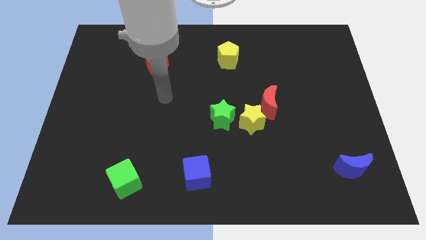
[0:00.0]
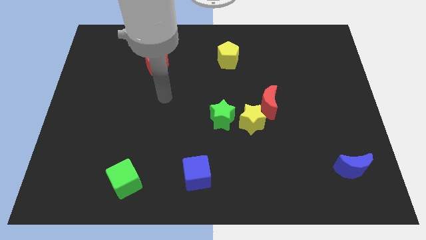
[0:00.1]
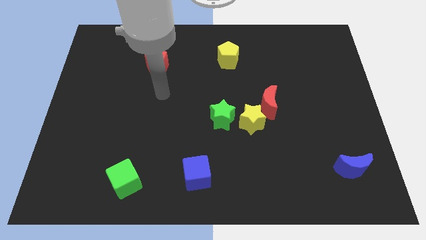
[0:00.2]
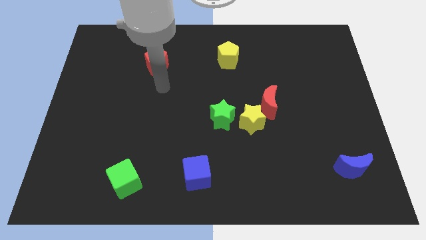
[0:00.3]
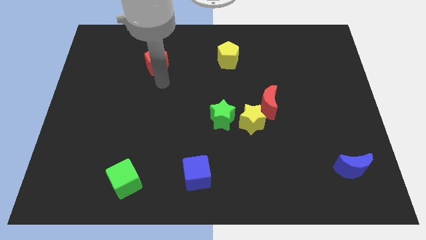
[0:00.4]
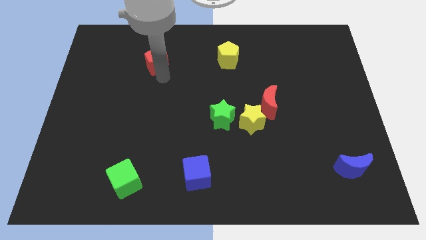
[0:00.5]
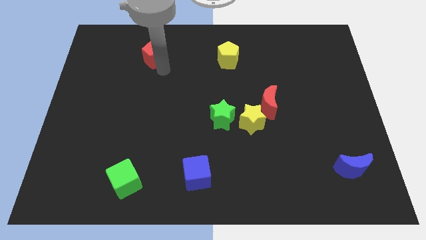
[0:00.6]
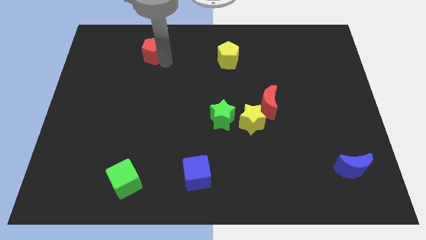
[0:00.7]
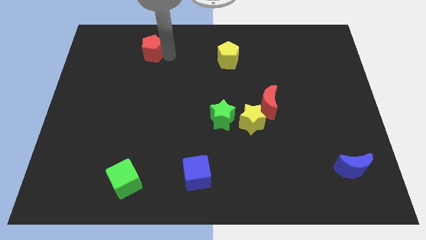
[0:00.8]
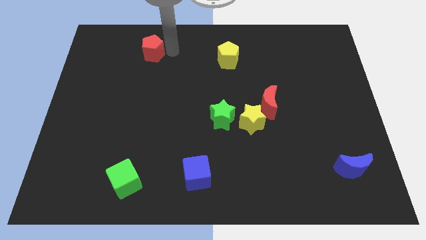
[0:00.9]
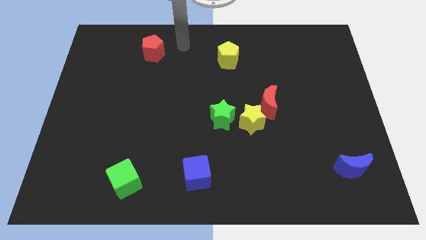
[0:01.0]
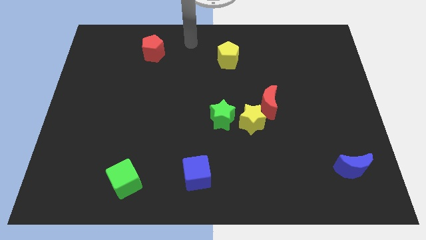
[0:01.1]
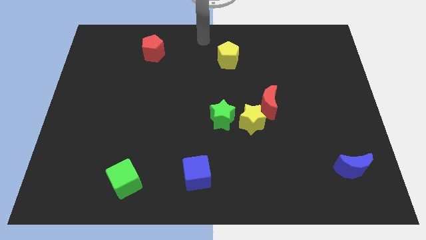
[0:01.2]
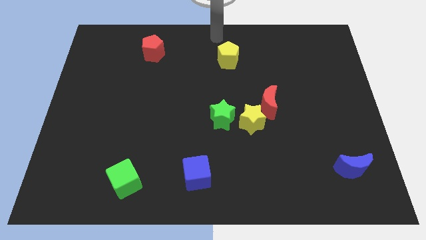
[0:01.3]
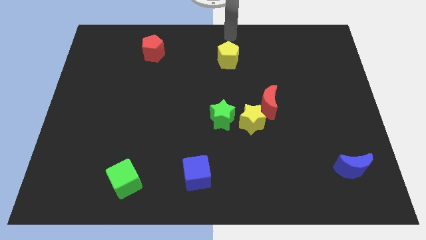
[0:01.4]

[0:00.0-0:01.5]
place your arm above yellow pentagon

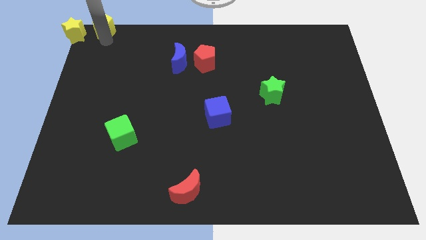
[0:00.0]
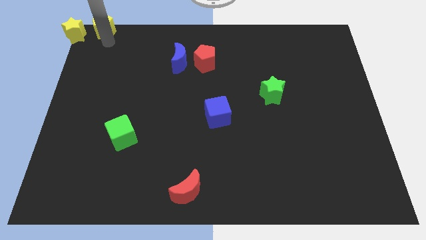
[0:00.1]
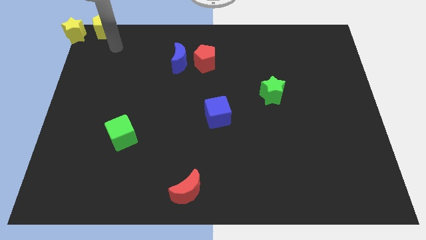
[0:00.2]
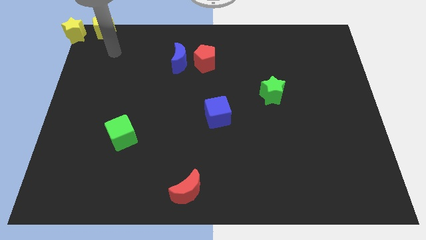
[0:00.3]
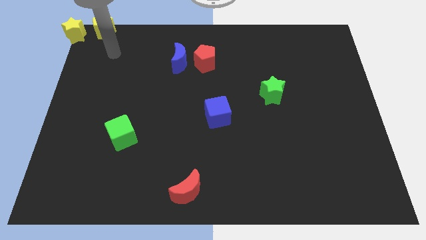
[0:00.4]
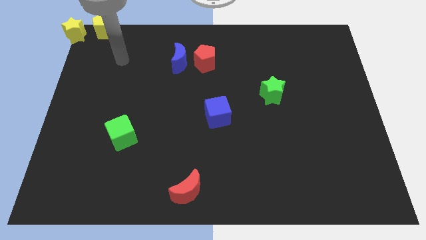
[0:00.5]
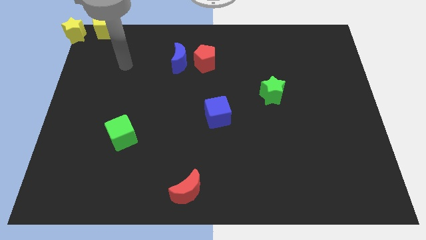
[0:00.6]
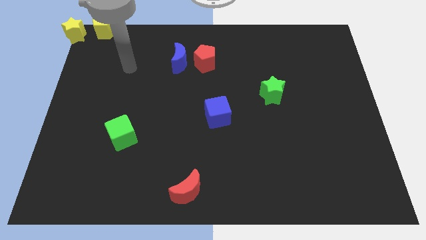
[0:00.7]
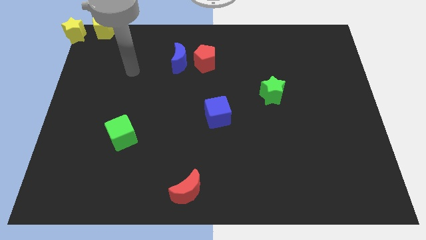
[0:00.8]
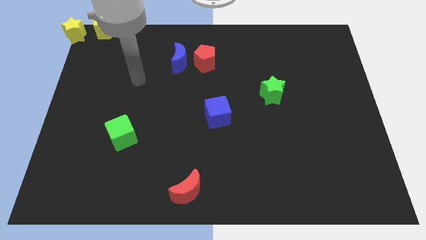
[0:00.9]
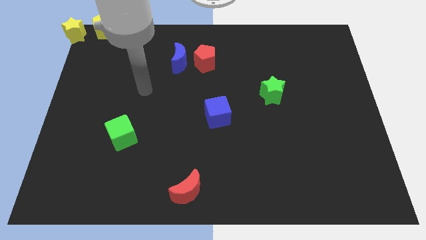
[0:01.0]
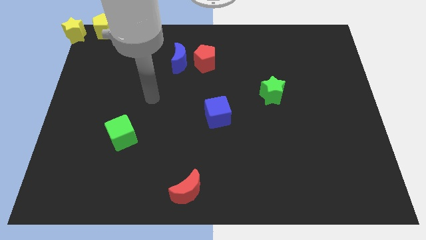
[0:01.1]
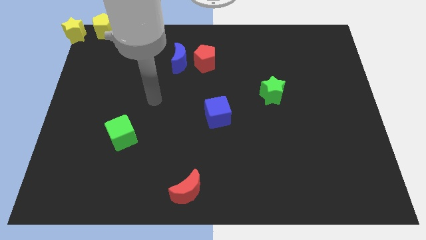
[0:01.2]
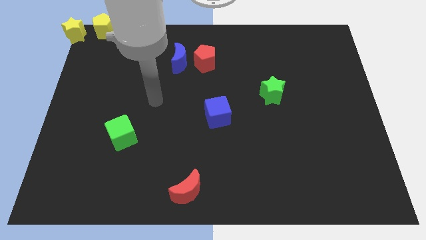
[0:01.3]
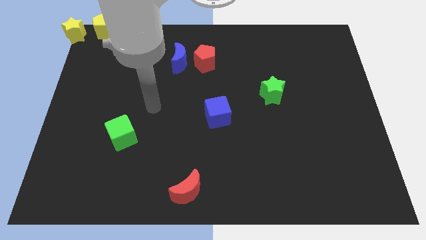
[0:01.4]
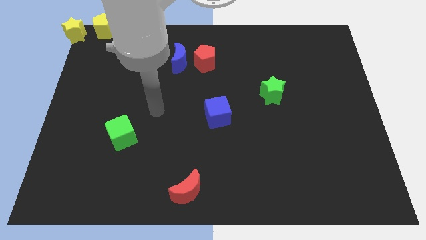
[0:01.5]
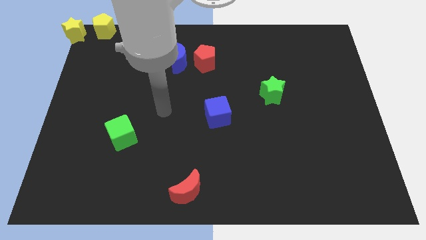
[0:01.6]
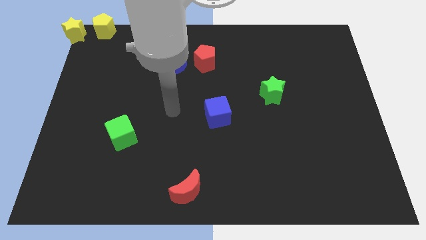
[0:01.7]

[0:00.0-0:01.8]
move your arm towards the center of the board

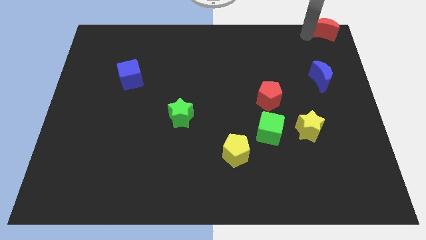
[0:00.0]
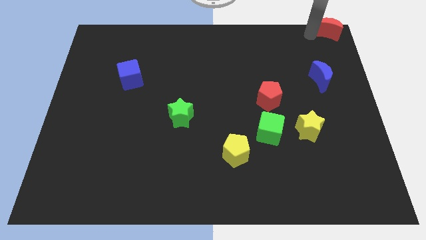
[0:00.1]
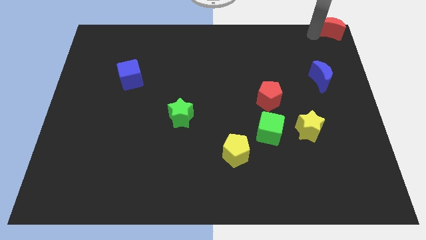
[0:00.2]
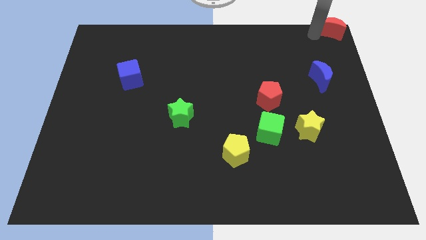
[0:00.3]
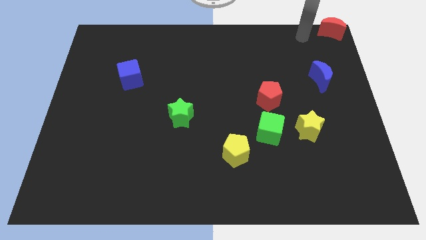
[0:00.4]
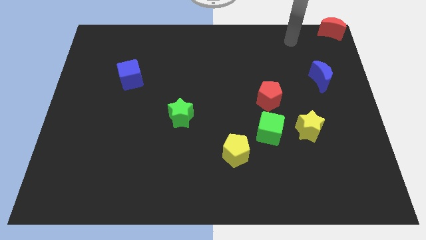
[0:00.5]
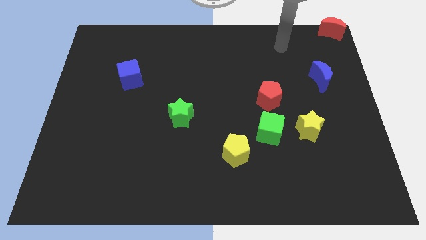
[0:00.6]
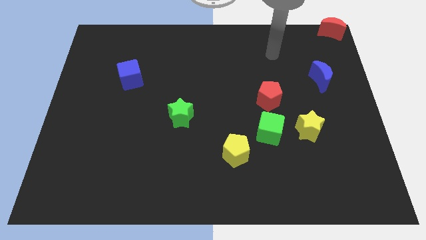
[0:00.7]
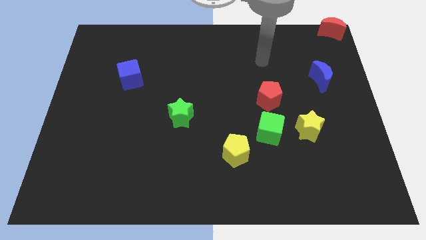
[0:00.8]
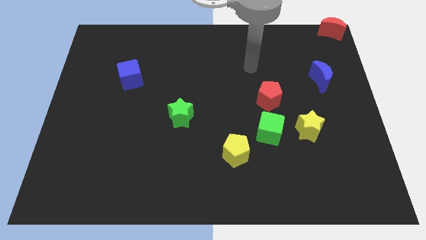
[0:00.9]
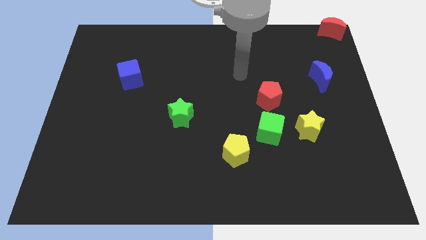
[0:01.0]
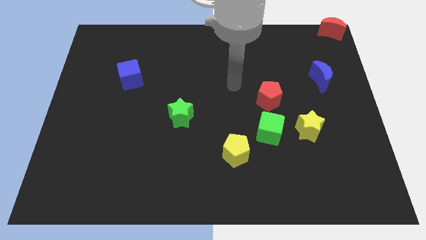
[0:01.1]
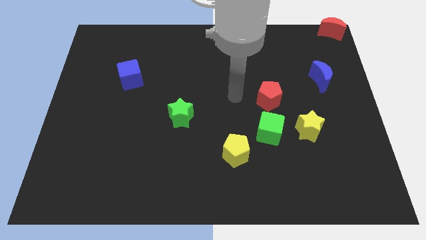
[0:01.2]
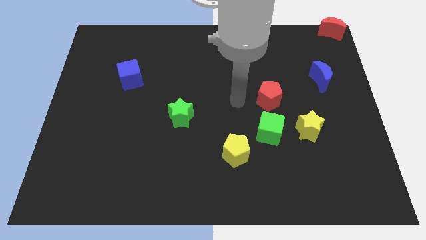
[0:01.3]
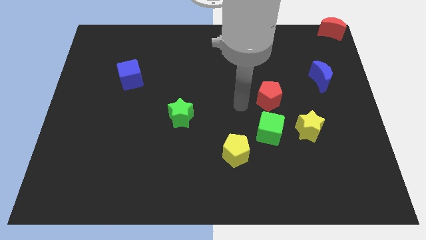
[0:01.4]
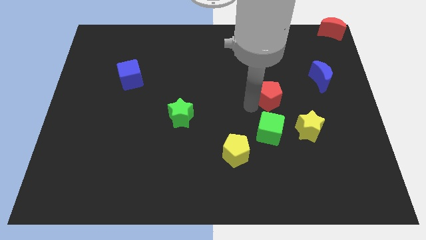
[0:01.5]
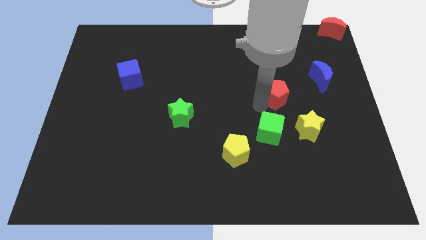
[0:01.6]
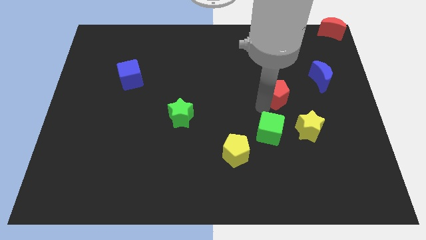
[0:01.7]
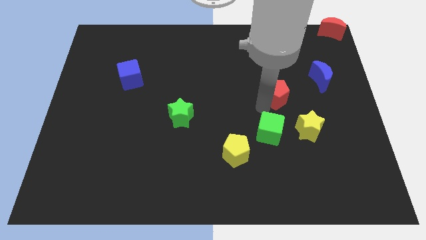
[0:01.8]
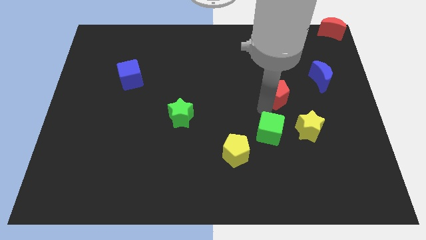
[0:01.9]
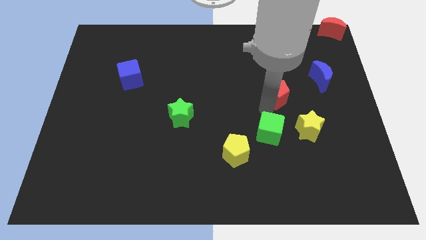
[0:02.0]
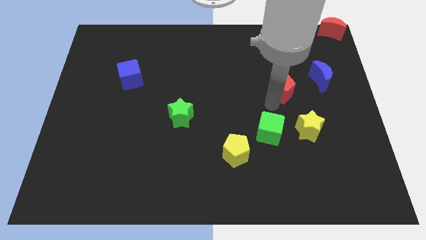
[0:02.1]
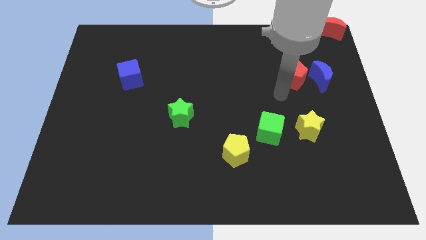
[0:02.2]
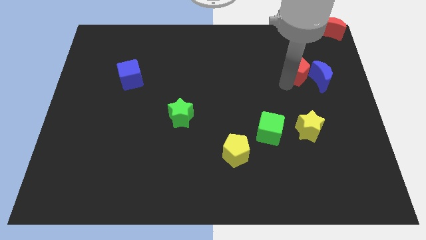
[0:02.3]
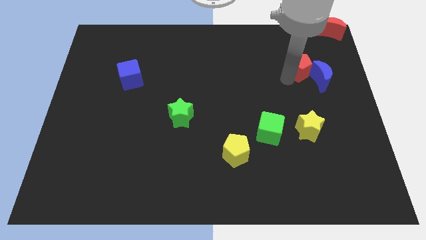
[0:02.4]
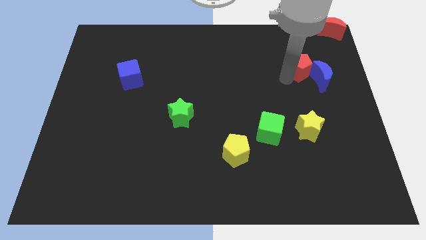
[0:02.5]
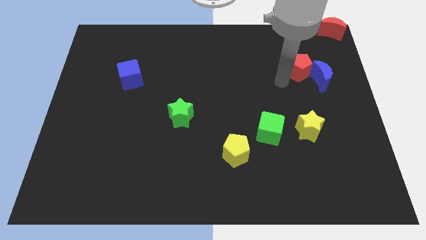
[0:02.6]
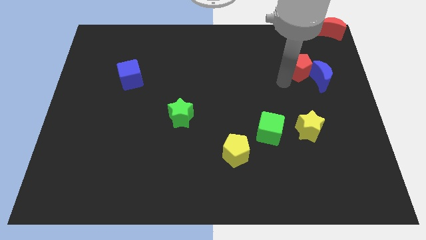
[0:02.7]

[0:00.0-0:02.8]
move the red pentagon left to the blue moon

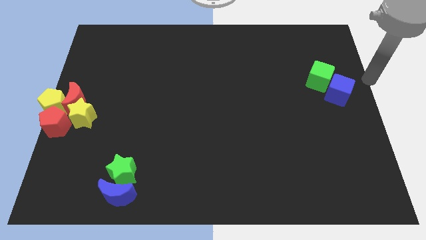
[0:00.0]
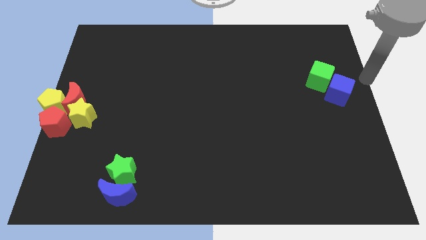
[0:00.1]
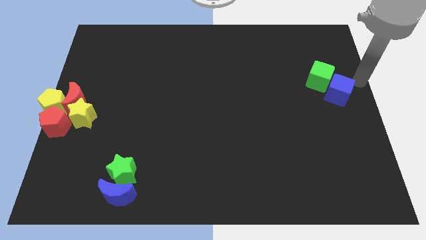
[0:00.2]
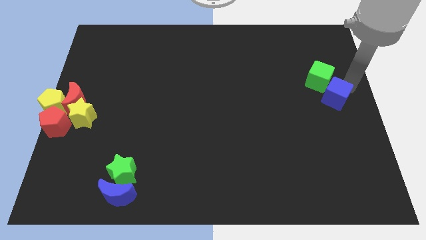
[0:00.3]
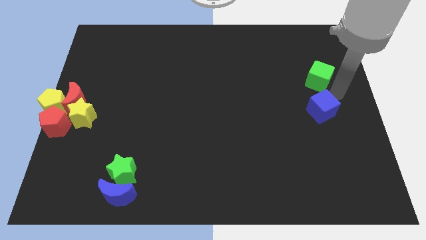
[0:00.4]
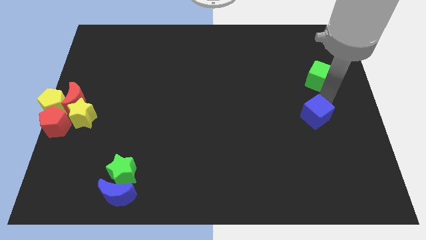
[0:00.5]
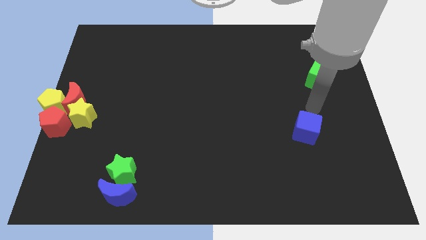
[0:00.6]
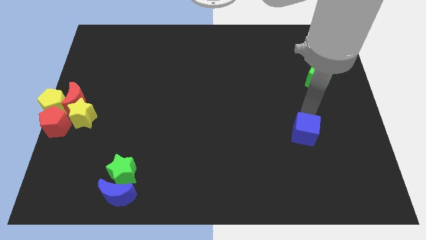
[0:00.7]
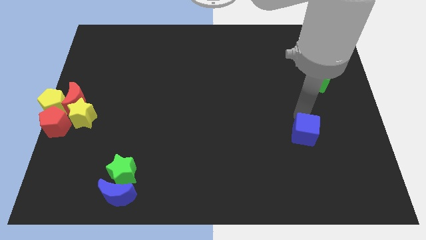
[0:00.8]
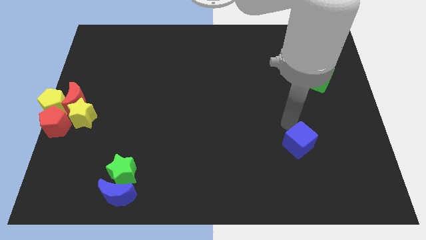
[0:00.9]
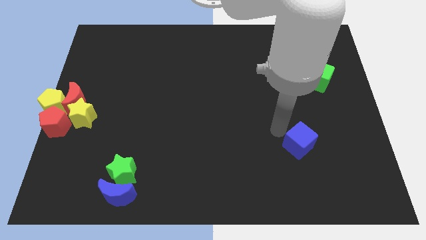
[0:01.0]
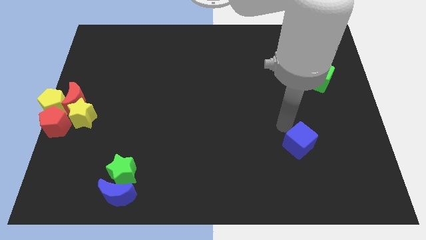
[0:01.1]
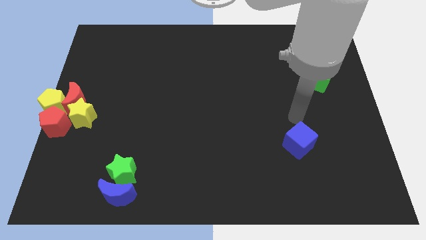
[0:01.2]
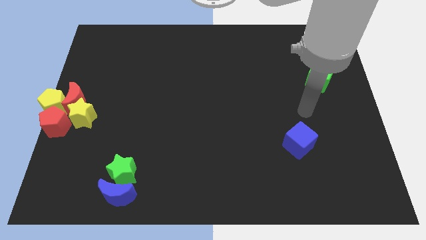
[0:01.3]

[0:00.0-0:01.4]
push the blue cube slightly down

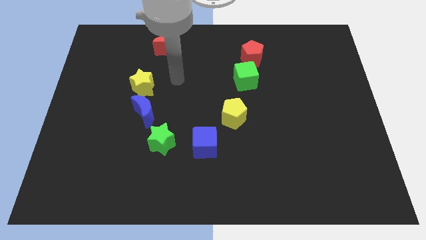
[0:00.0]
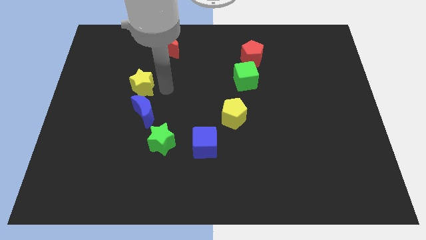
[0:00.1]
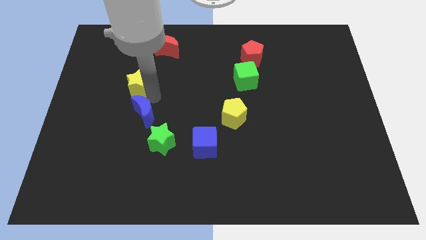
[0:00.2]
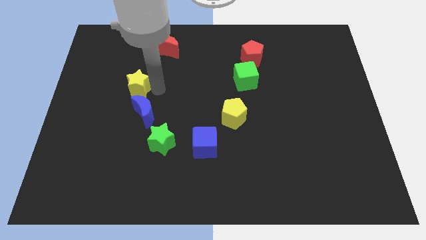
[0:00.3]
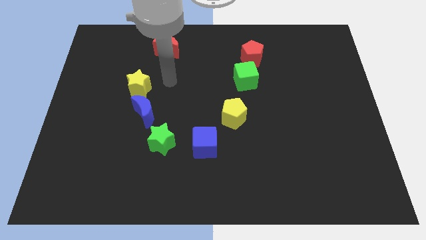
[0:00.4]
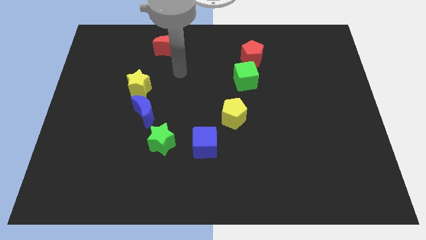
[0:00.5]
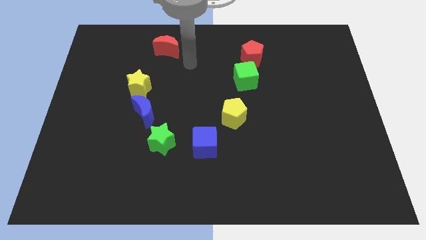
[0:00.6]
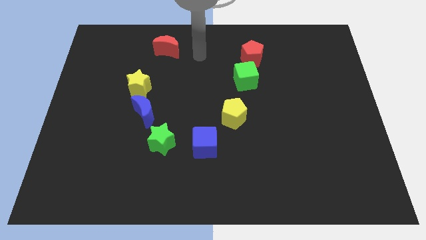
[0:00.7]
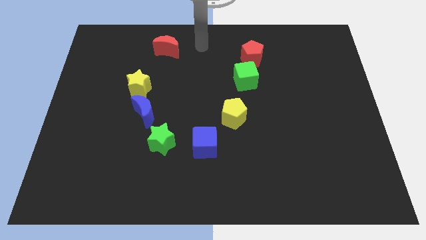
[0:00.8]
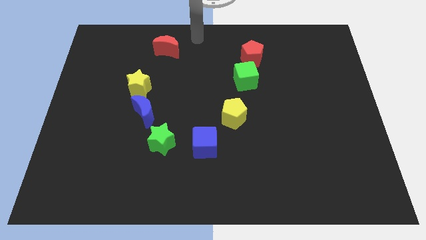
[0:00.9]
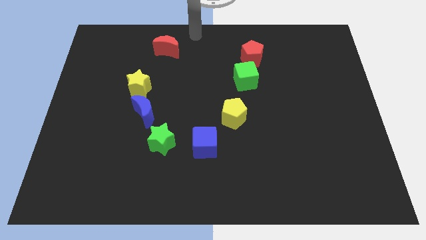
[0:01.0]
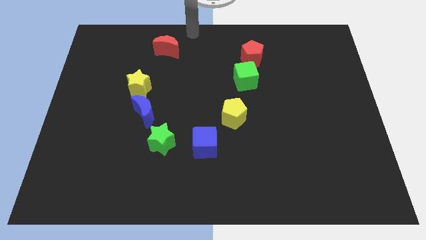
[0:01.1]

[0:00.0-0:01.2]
move the yellow star slightly

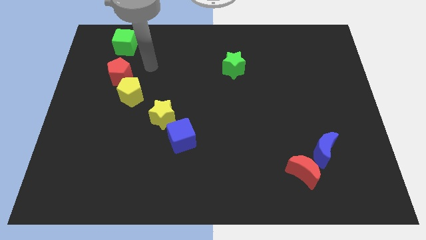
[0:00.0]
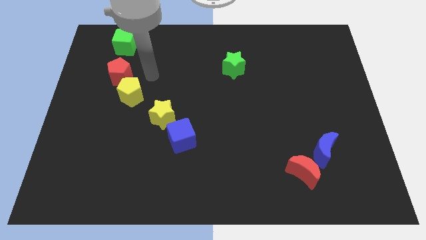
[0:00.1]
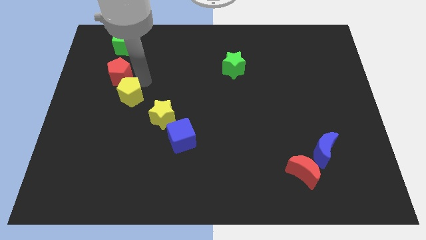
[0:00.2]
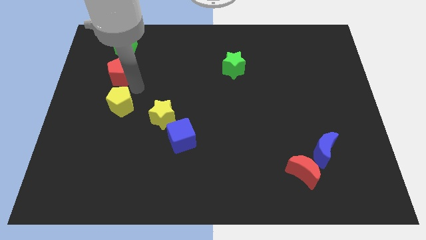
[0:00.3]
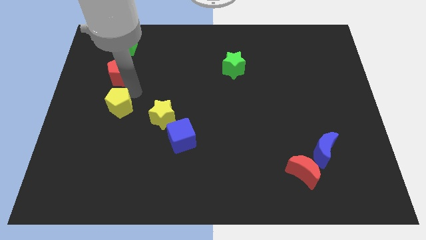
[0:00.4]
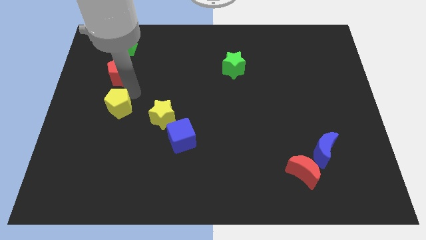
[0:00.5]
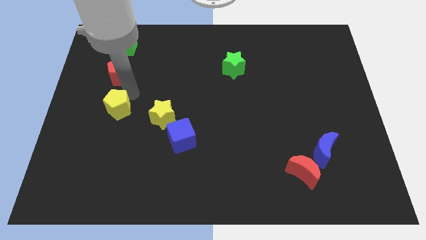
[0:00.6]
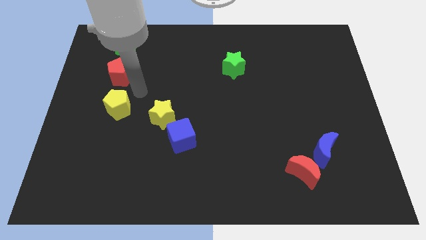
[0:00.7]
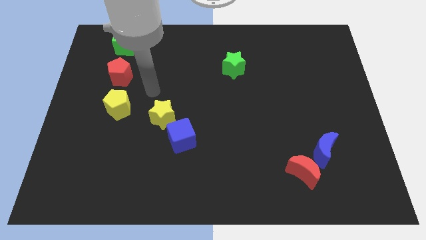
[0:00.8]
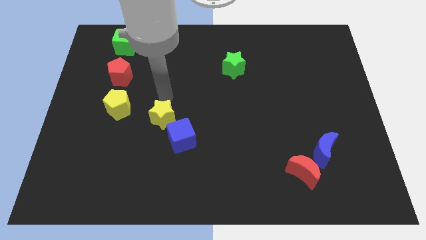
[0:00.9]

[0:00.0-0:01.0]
put the yellow pentagon below the red pentagon
